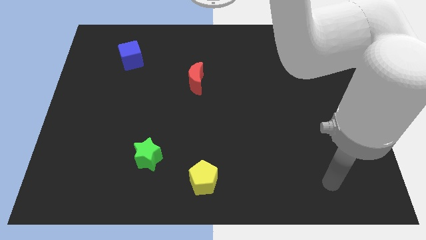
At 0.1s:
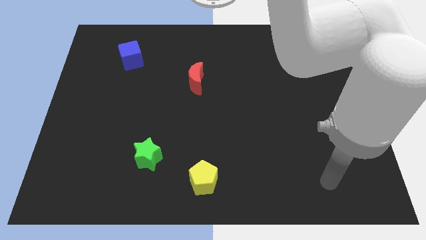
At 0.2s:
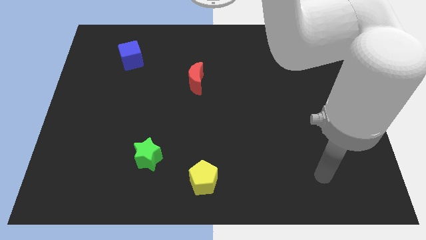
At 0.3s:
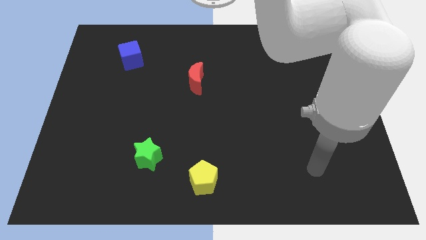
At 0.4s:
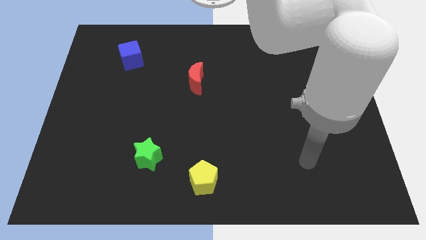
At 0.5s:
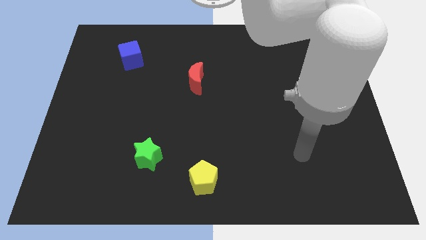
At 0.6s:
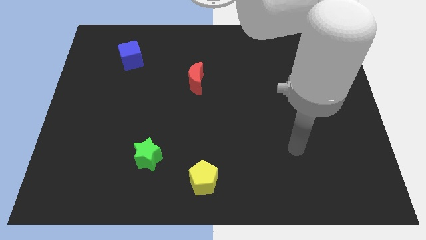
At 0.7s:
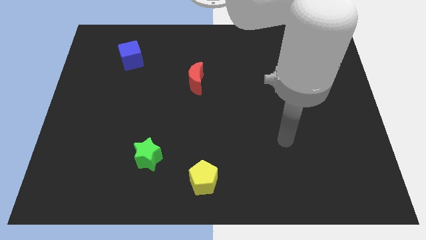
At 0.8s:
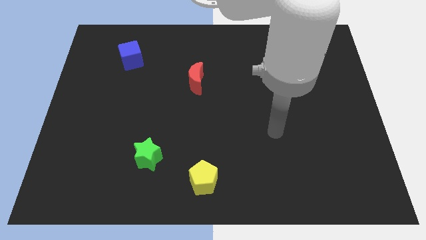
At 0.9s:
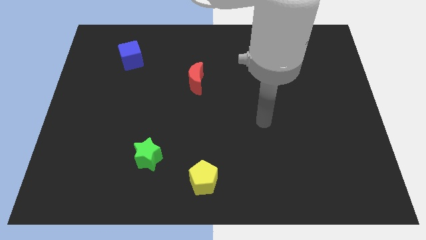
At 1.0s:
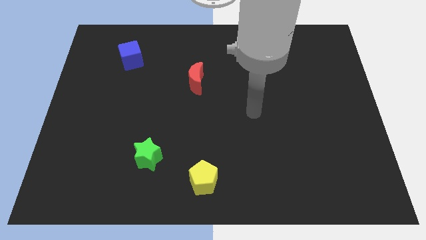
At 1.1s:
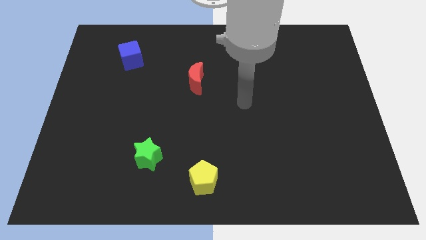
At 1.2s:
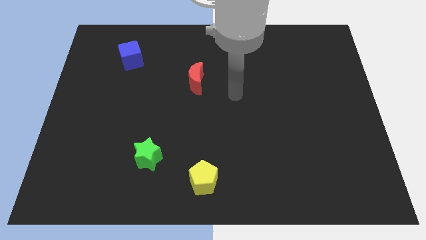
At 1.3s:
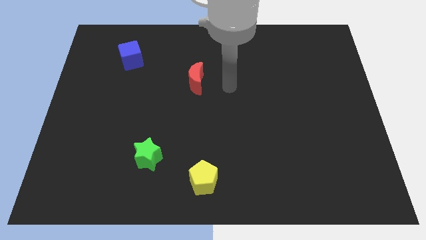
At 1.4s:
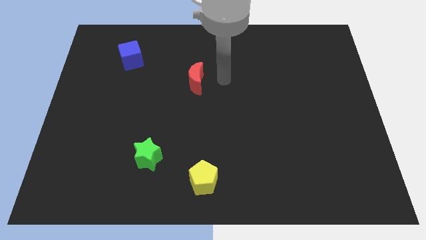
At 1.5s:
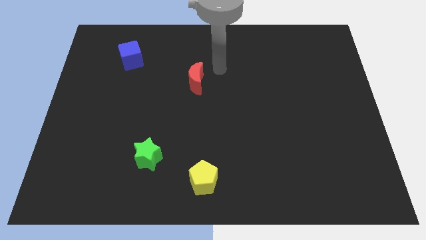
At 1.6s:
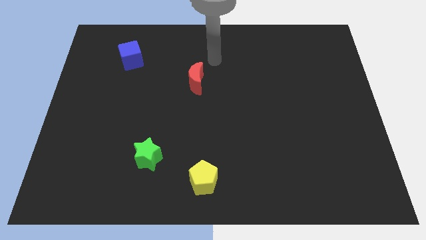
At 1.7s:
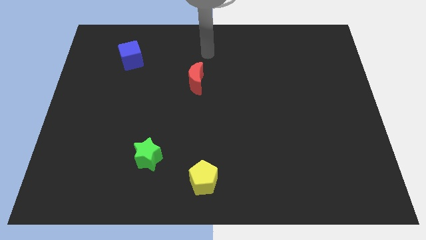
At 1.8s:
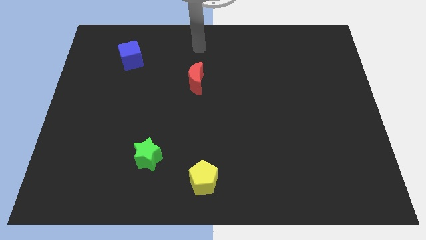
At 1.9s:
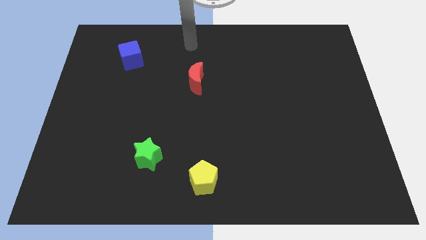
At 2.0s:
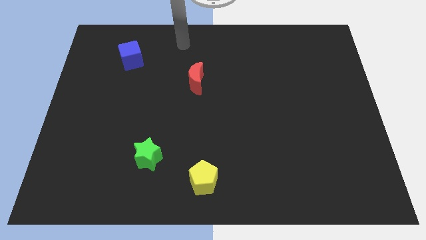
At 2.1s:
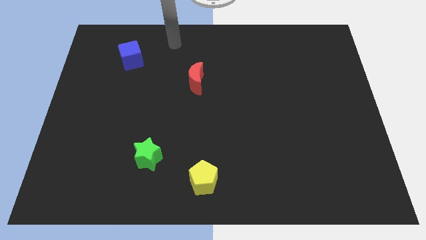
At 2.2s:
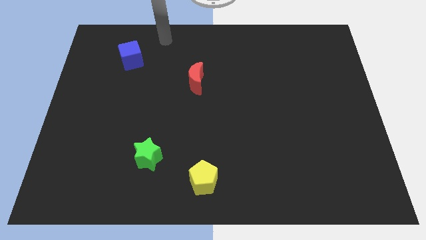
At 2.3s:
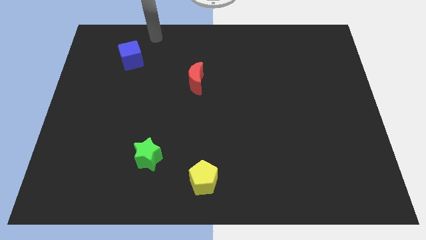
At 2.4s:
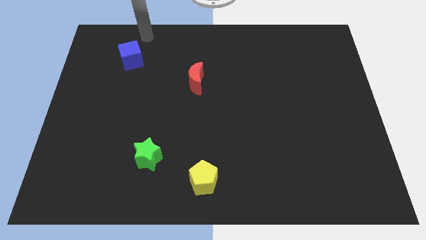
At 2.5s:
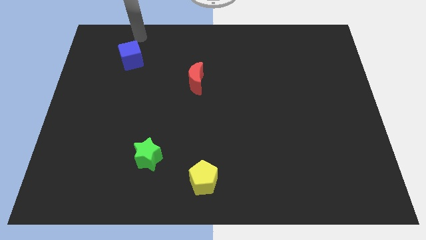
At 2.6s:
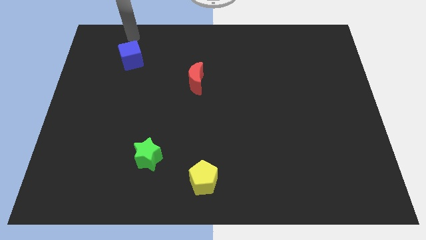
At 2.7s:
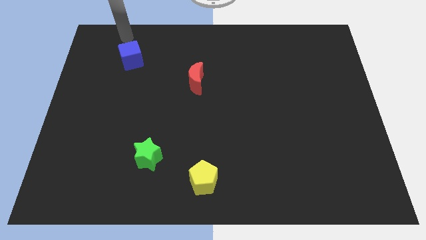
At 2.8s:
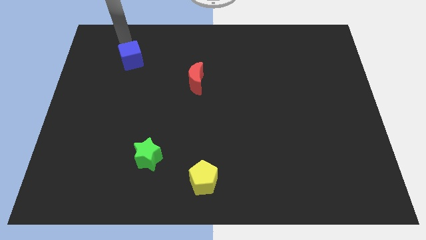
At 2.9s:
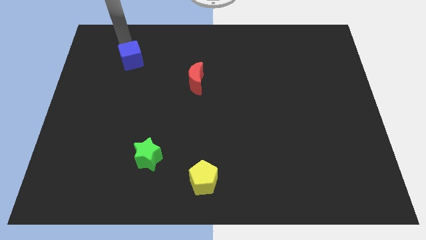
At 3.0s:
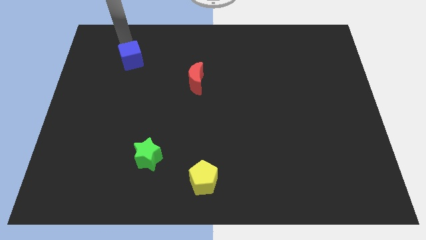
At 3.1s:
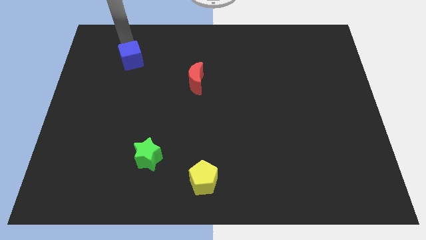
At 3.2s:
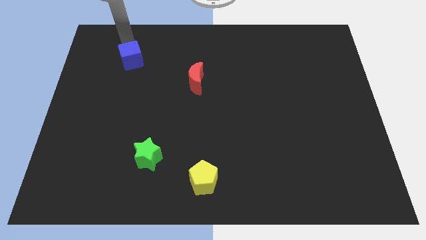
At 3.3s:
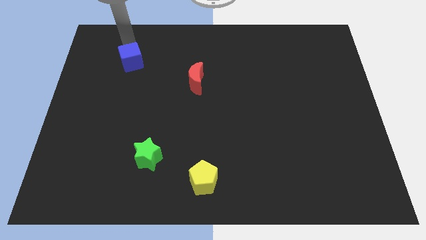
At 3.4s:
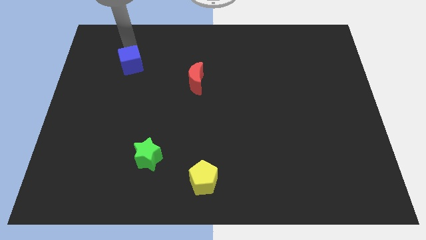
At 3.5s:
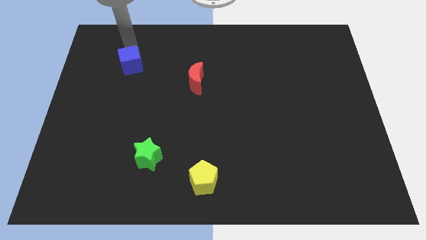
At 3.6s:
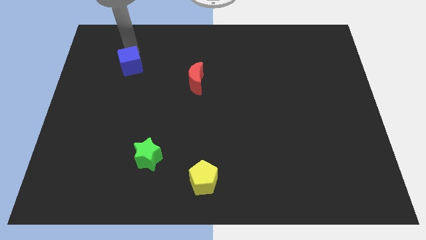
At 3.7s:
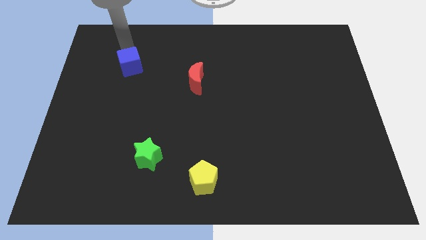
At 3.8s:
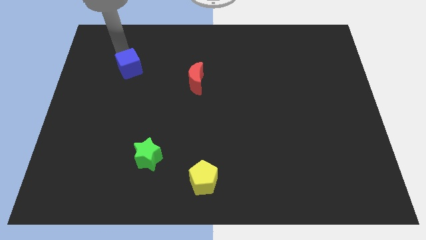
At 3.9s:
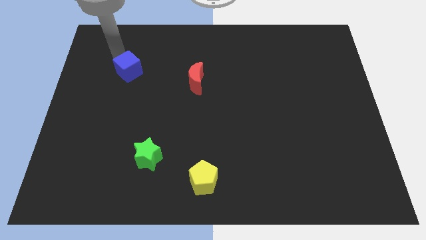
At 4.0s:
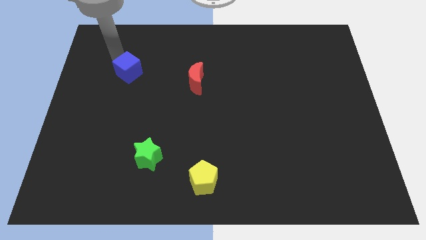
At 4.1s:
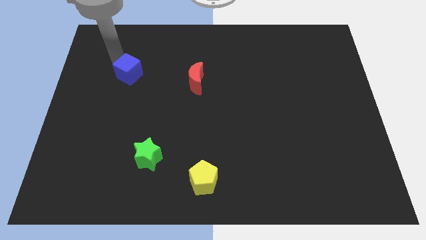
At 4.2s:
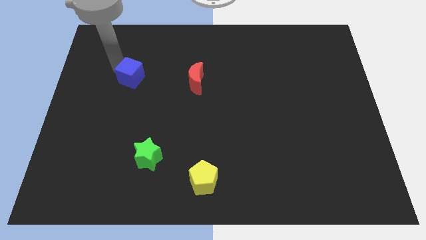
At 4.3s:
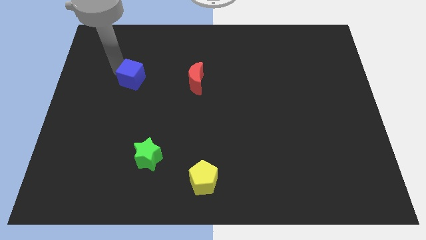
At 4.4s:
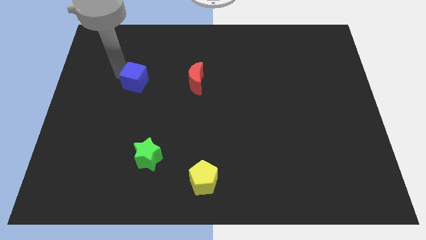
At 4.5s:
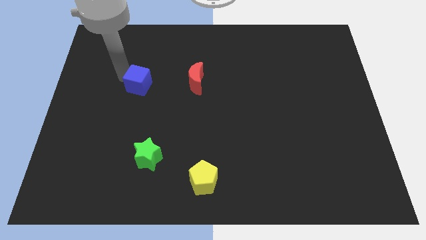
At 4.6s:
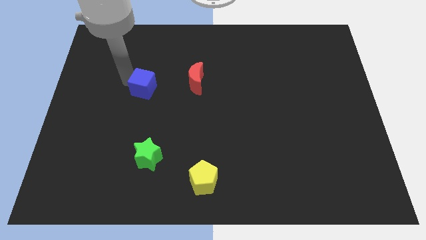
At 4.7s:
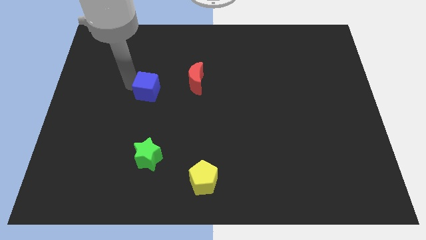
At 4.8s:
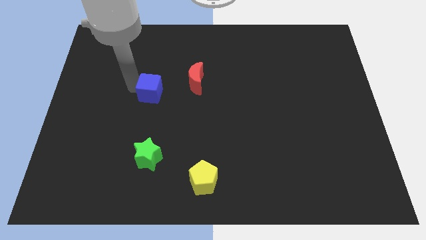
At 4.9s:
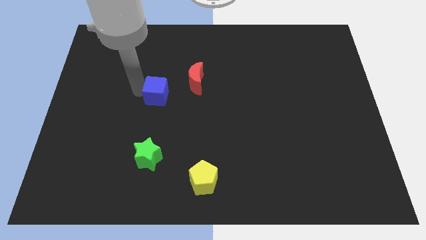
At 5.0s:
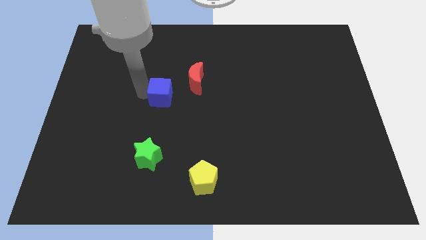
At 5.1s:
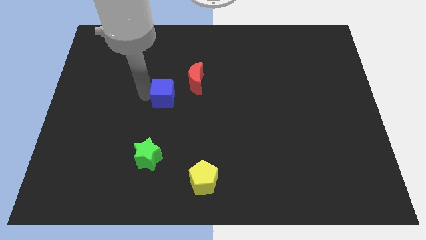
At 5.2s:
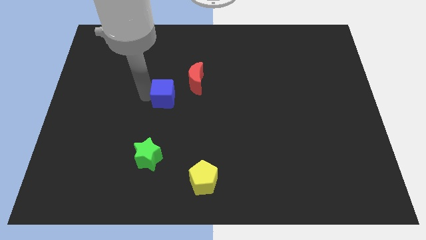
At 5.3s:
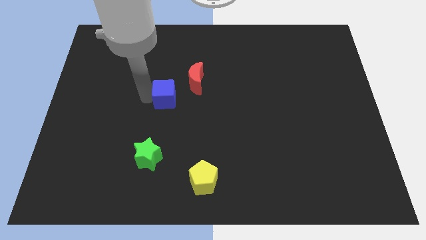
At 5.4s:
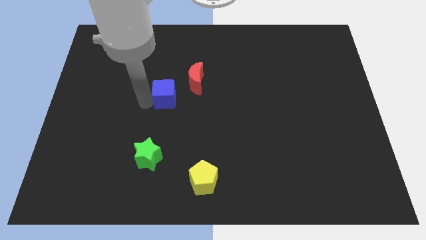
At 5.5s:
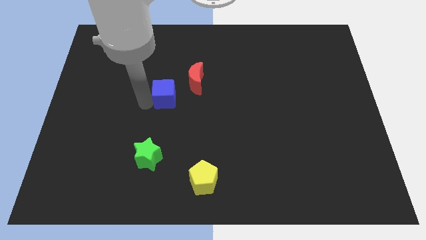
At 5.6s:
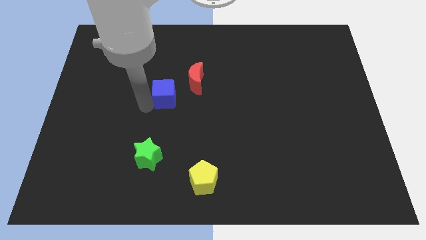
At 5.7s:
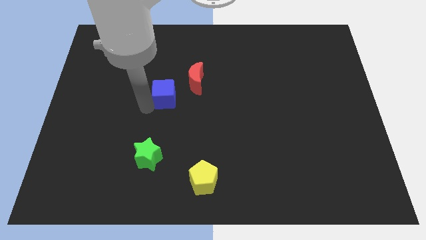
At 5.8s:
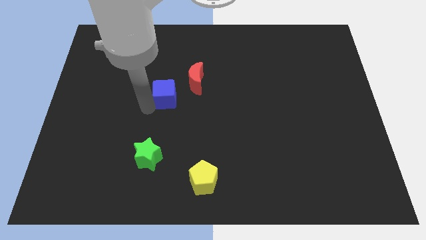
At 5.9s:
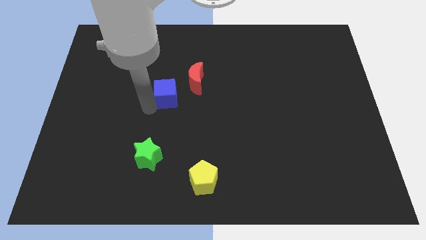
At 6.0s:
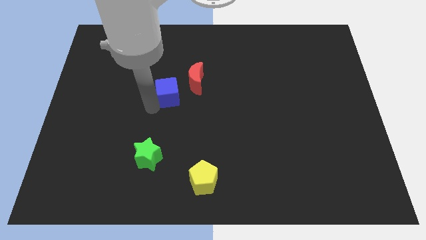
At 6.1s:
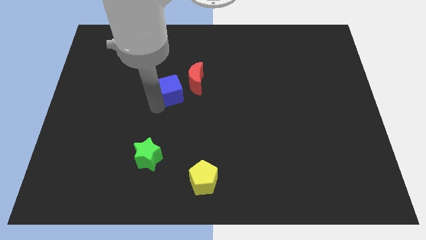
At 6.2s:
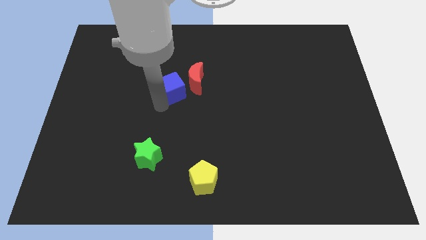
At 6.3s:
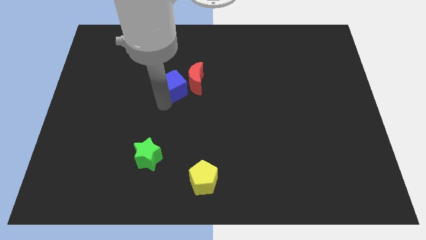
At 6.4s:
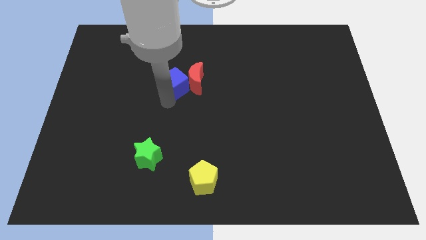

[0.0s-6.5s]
move the blue cube next to the red moon

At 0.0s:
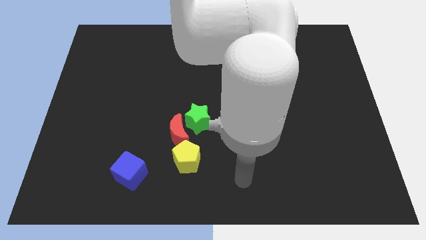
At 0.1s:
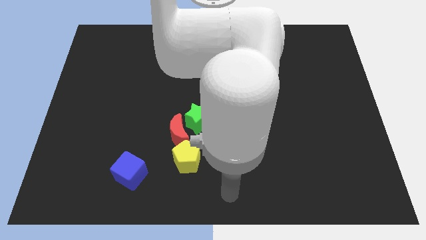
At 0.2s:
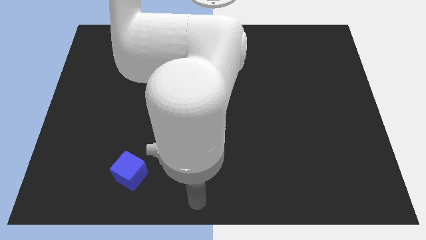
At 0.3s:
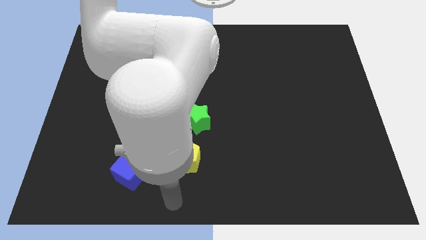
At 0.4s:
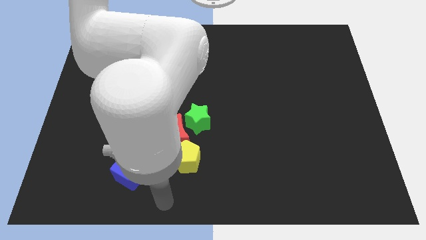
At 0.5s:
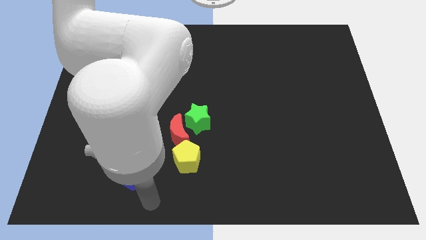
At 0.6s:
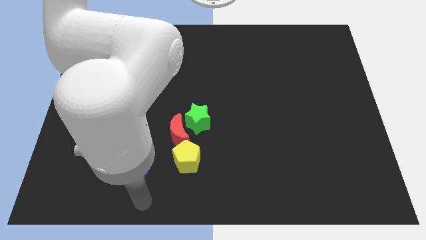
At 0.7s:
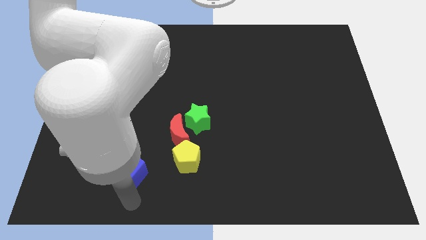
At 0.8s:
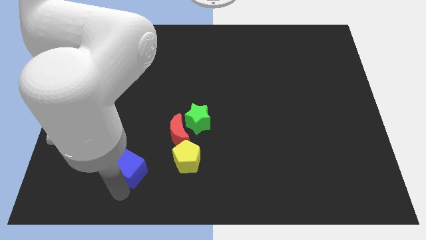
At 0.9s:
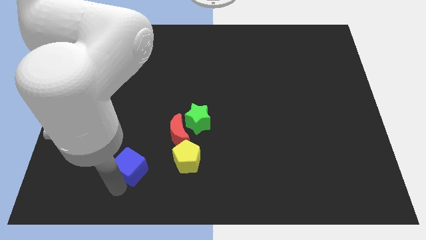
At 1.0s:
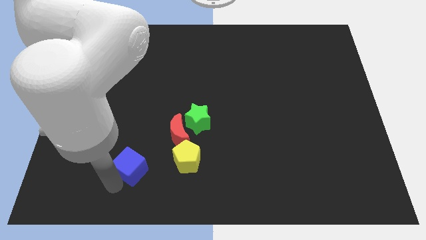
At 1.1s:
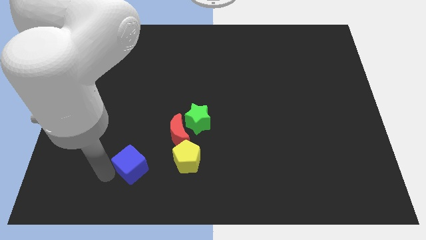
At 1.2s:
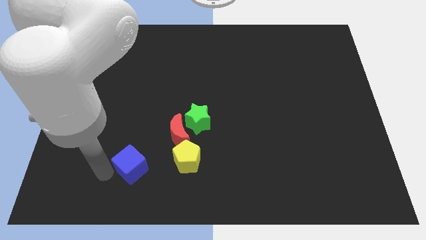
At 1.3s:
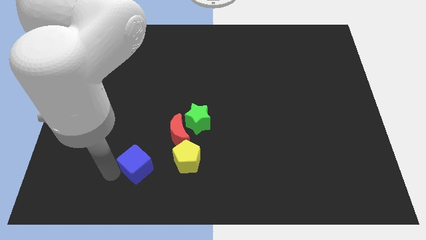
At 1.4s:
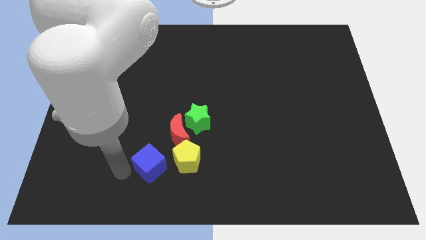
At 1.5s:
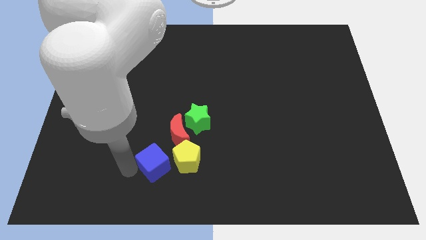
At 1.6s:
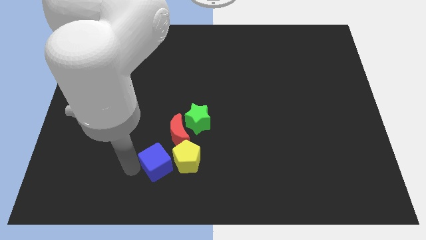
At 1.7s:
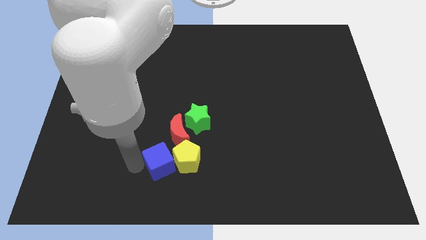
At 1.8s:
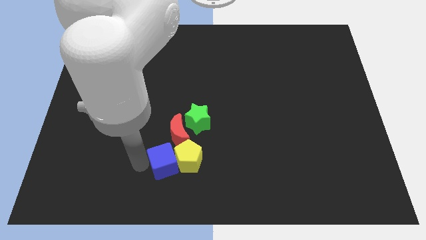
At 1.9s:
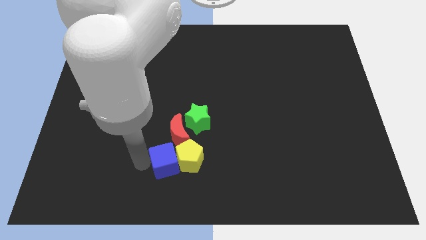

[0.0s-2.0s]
push the blue cube next to the yellow pentagon

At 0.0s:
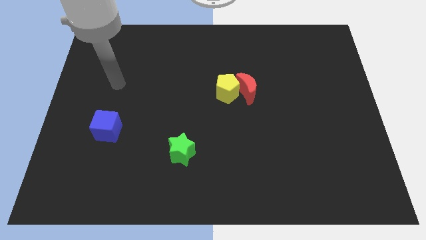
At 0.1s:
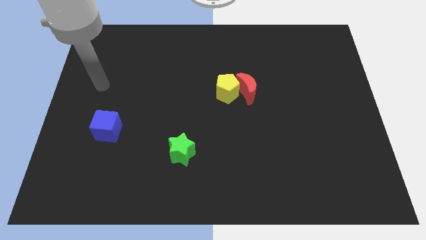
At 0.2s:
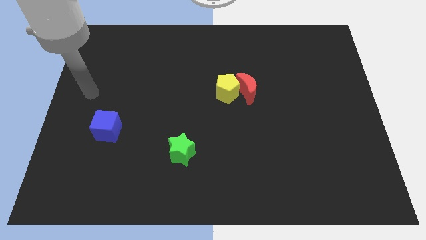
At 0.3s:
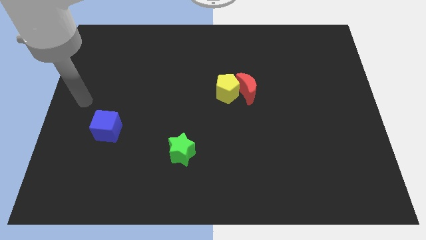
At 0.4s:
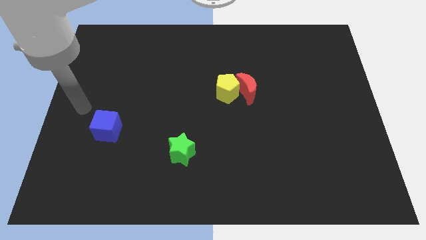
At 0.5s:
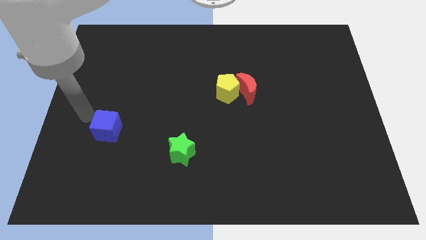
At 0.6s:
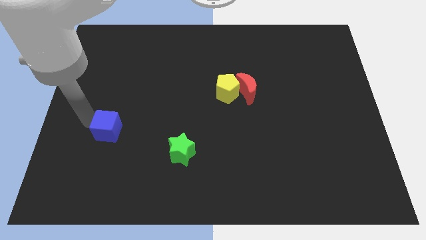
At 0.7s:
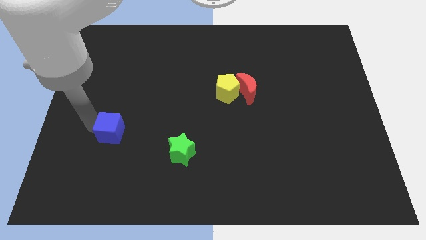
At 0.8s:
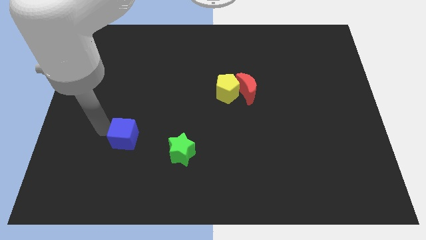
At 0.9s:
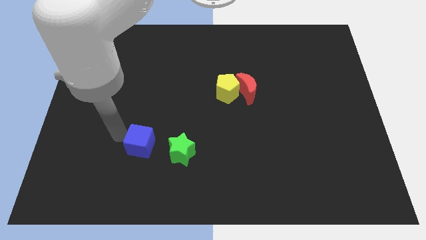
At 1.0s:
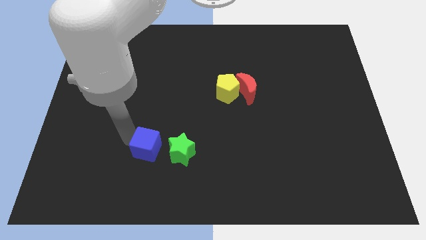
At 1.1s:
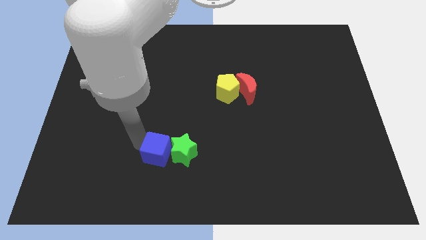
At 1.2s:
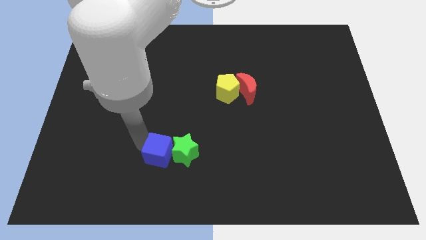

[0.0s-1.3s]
put the blue block close to the star
